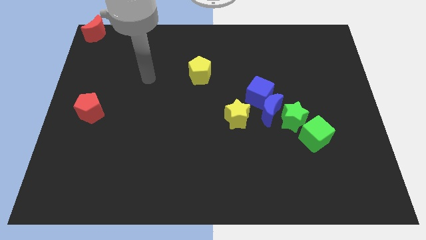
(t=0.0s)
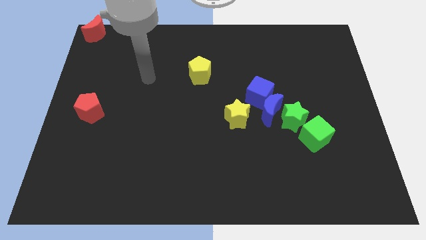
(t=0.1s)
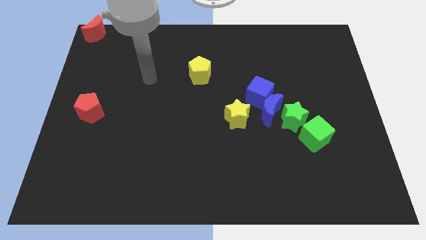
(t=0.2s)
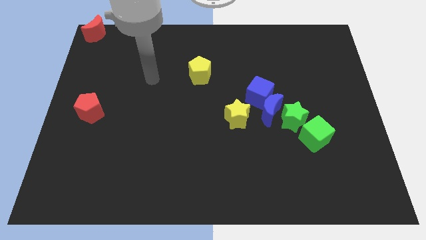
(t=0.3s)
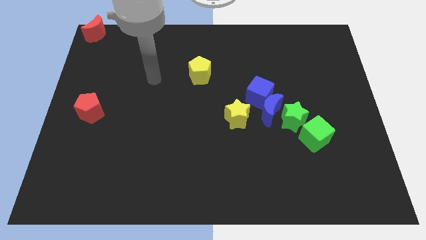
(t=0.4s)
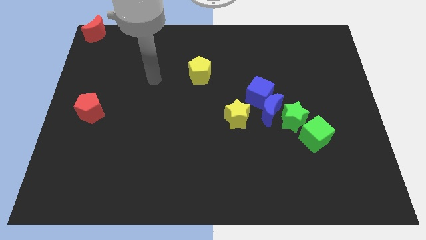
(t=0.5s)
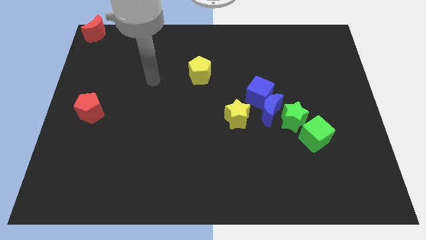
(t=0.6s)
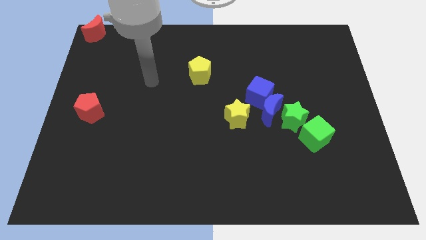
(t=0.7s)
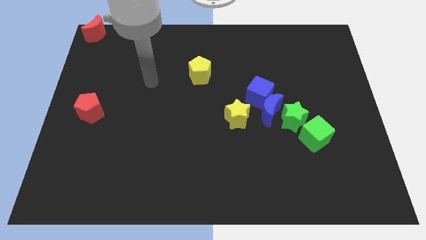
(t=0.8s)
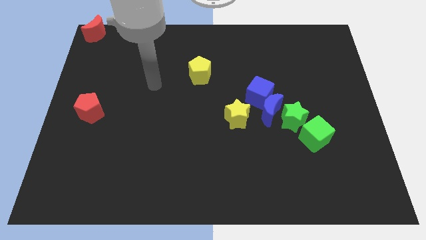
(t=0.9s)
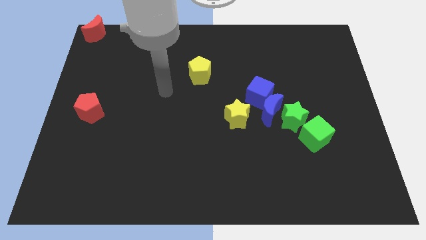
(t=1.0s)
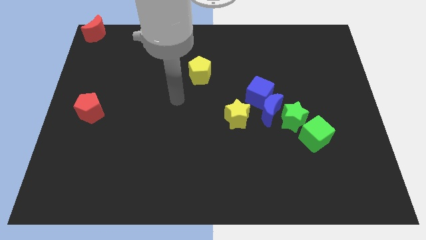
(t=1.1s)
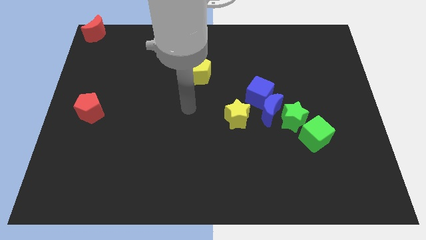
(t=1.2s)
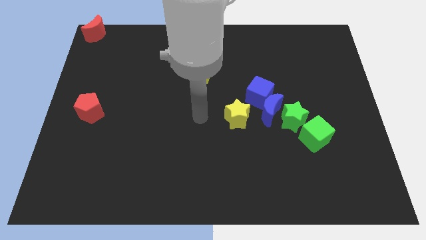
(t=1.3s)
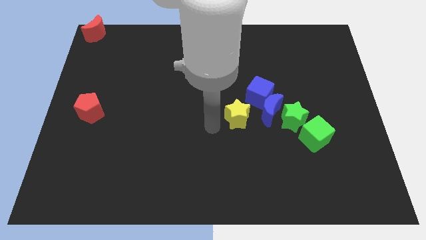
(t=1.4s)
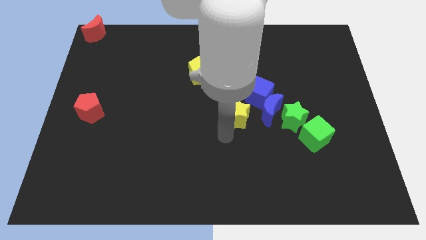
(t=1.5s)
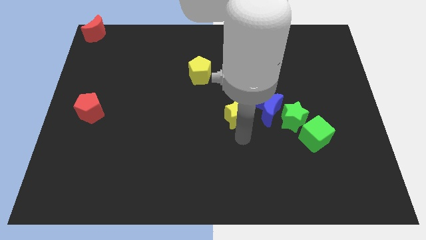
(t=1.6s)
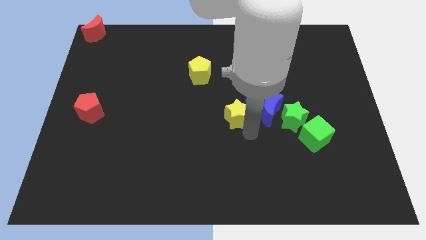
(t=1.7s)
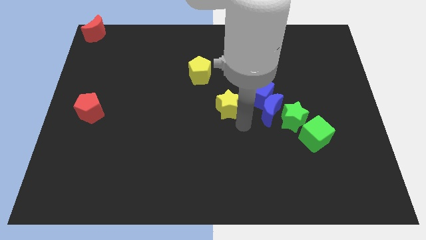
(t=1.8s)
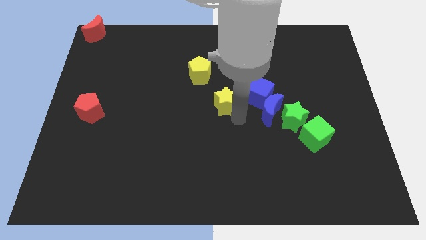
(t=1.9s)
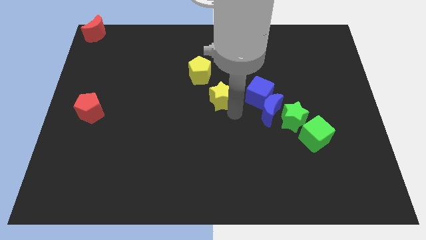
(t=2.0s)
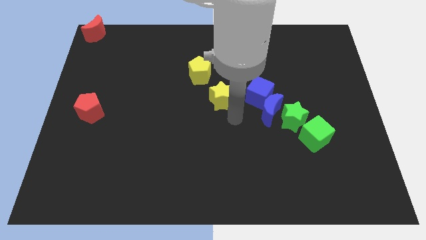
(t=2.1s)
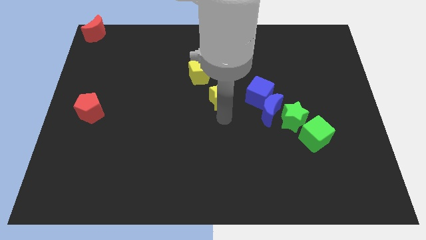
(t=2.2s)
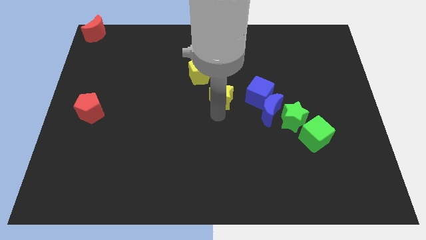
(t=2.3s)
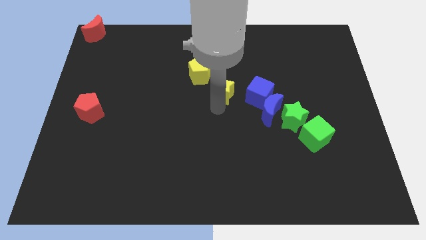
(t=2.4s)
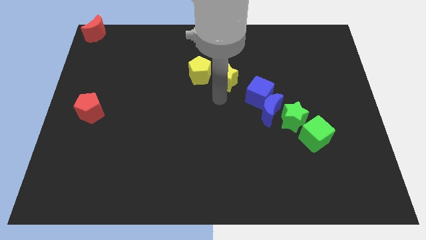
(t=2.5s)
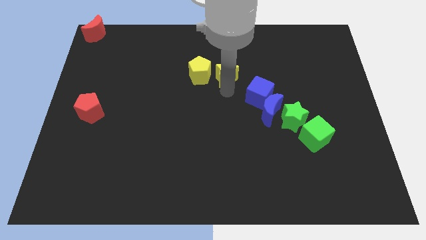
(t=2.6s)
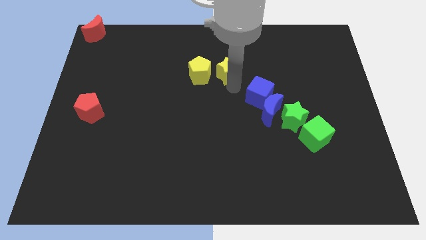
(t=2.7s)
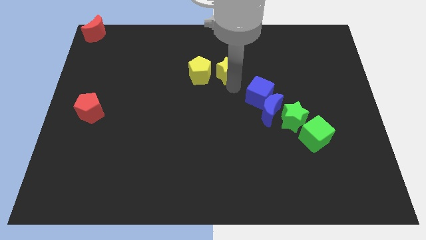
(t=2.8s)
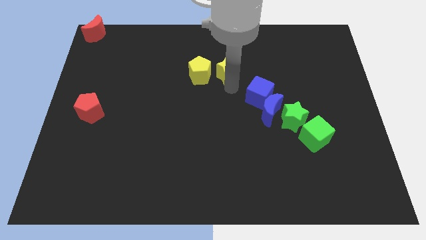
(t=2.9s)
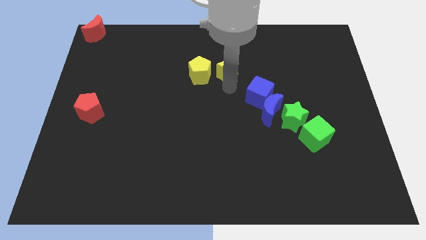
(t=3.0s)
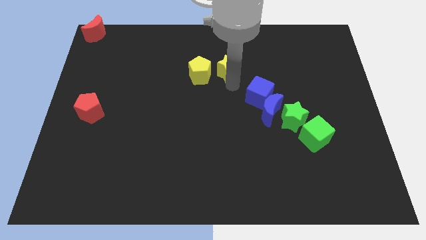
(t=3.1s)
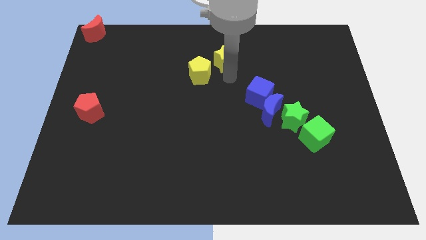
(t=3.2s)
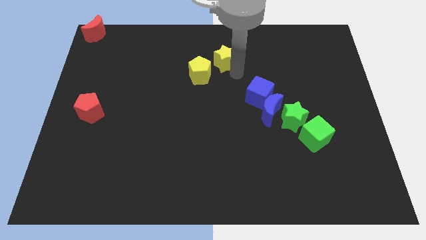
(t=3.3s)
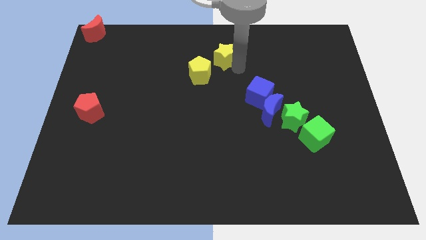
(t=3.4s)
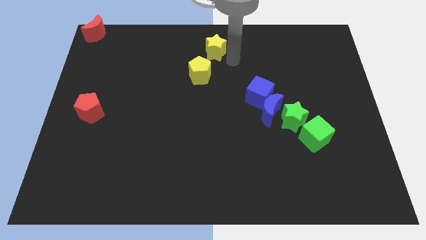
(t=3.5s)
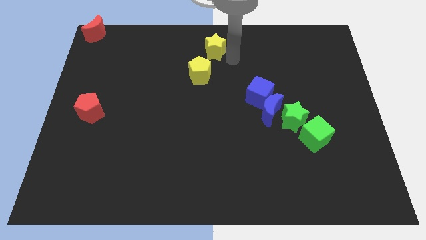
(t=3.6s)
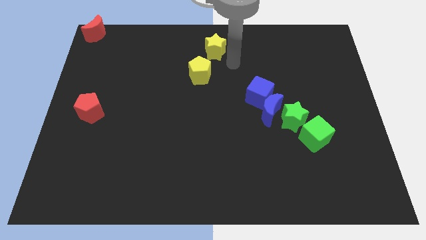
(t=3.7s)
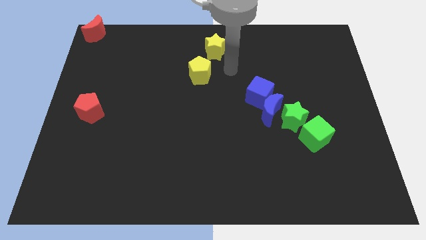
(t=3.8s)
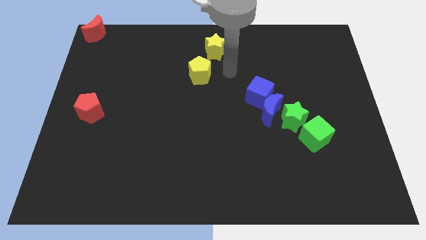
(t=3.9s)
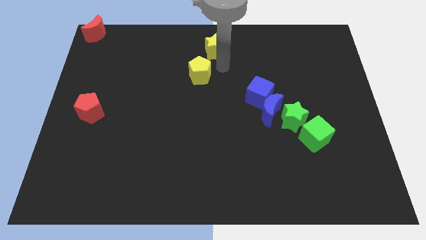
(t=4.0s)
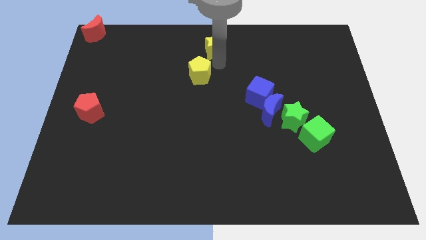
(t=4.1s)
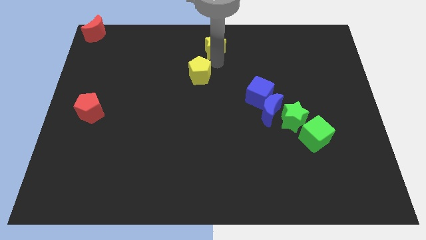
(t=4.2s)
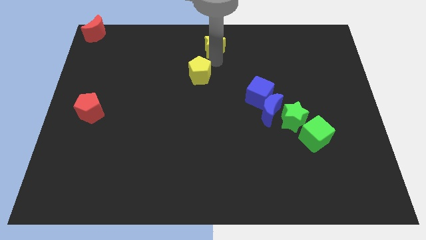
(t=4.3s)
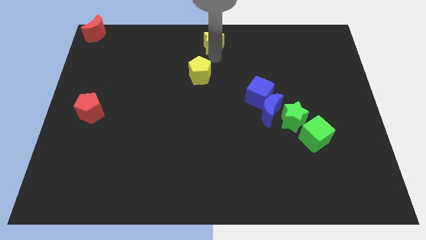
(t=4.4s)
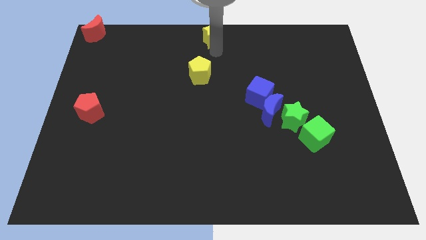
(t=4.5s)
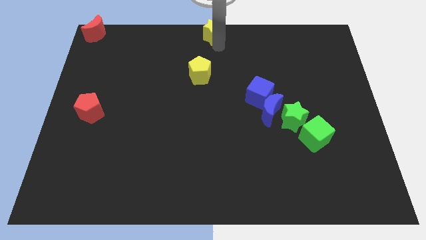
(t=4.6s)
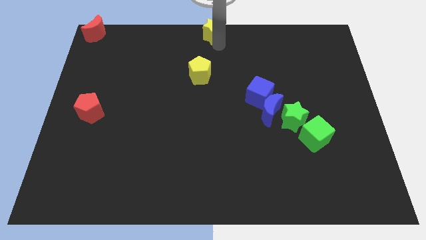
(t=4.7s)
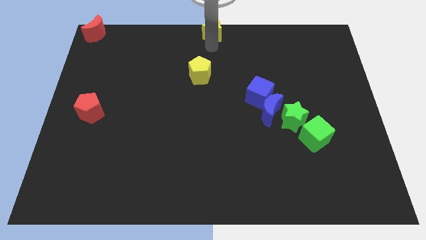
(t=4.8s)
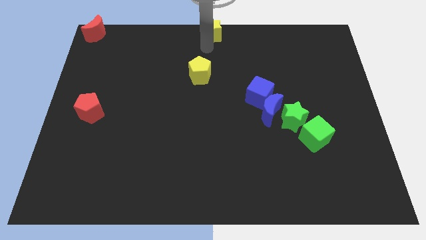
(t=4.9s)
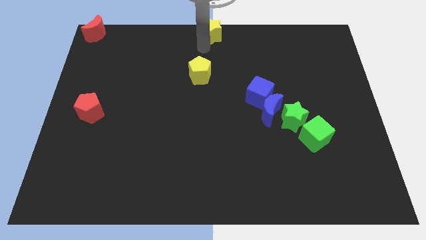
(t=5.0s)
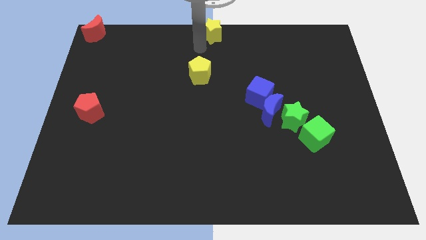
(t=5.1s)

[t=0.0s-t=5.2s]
place the yellow star to the top center of the board

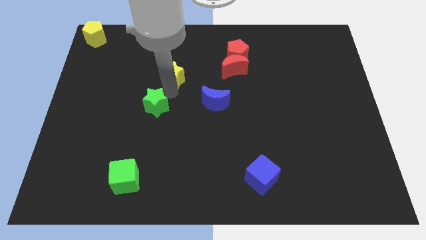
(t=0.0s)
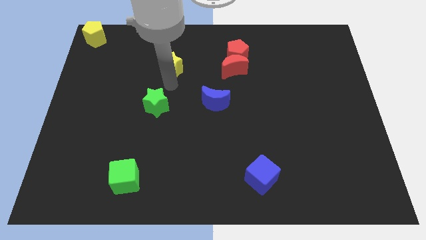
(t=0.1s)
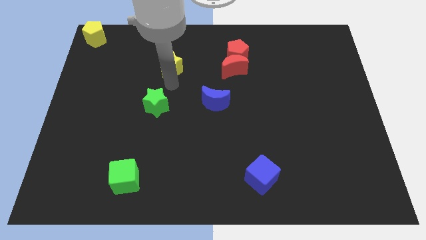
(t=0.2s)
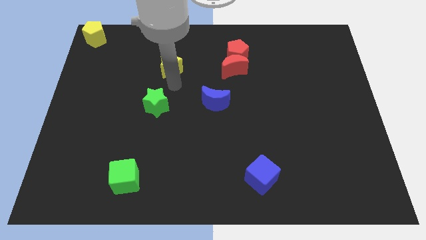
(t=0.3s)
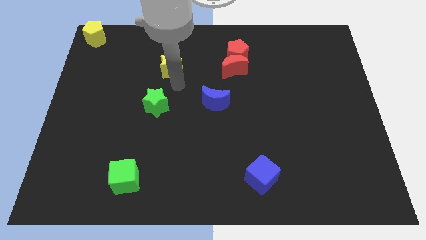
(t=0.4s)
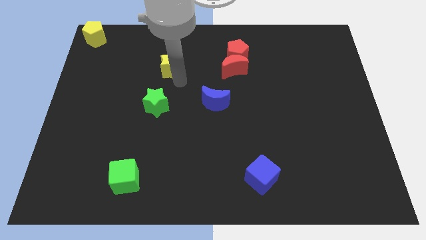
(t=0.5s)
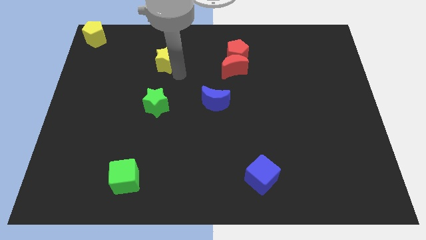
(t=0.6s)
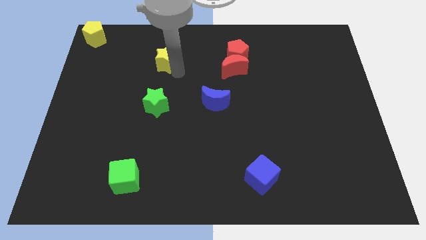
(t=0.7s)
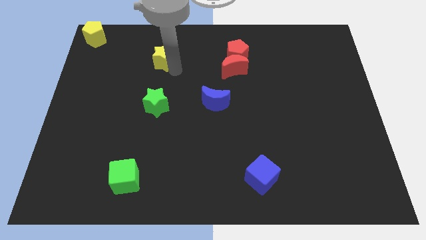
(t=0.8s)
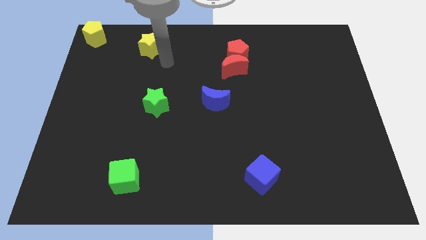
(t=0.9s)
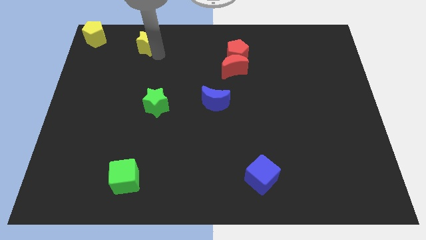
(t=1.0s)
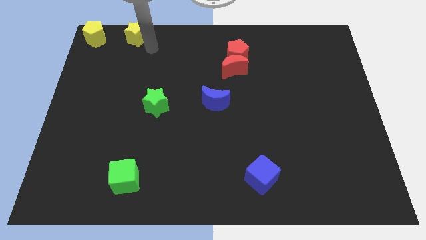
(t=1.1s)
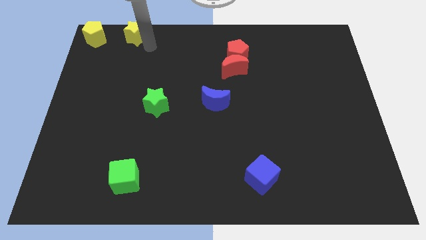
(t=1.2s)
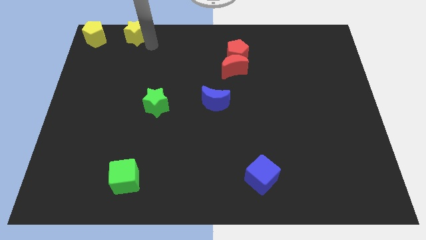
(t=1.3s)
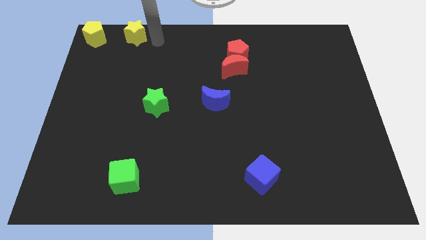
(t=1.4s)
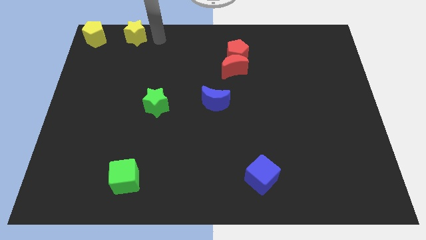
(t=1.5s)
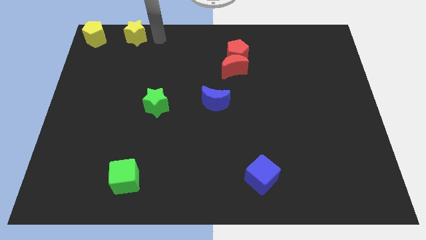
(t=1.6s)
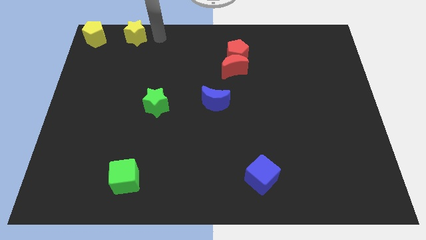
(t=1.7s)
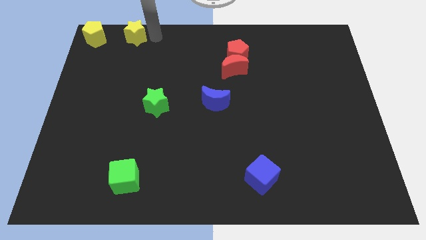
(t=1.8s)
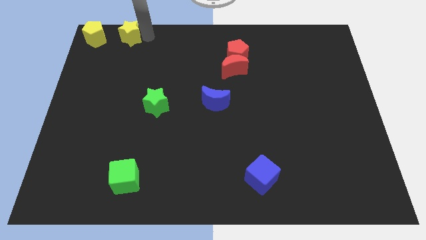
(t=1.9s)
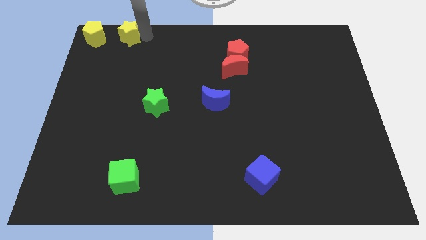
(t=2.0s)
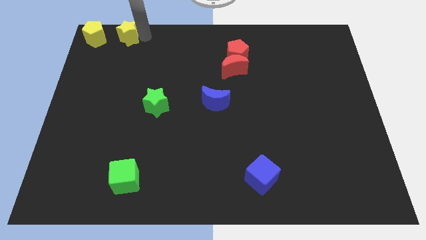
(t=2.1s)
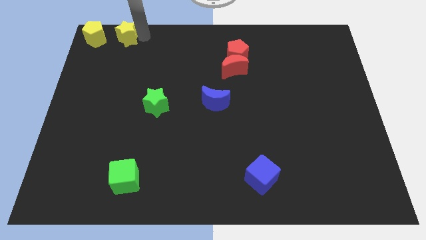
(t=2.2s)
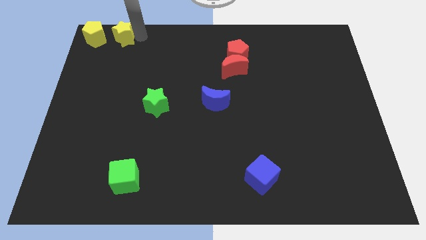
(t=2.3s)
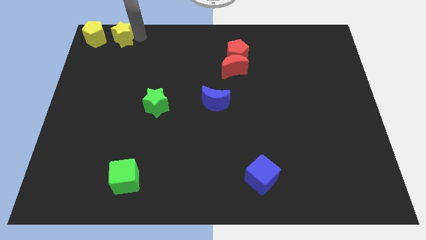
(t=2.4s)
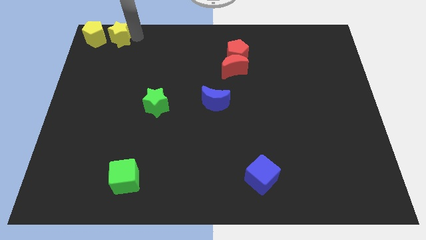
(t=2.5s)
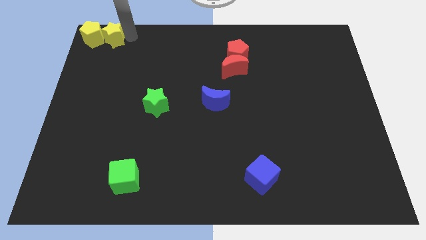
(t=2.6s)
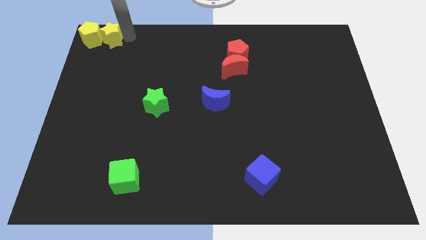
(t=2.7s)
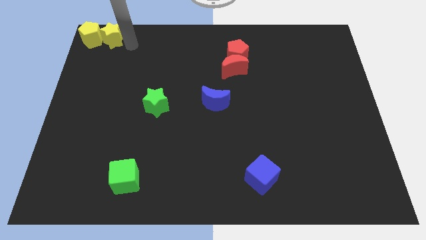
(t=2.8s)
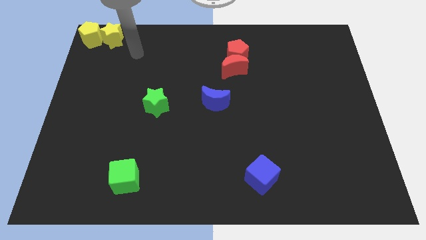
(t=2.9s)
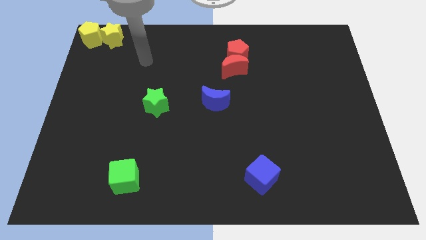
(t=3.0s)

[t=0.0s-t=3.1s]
push the yellow star to the right side of the yellow pentagon

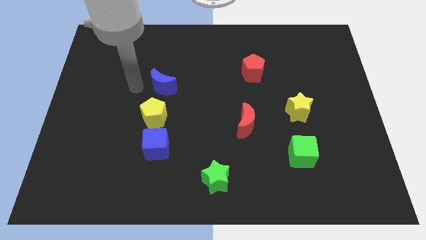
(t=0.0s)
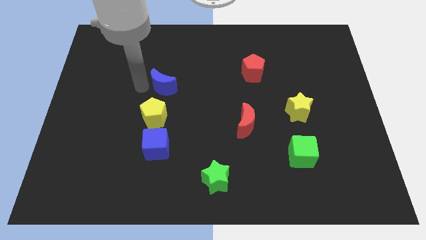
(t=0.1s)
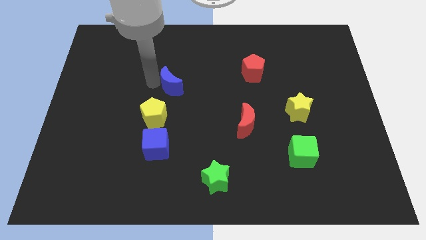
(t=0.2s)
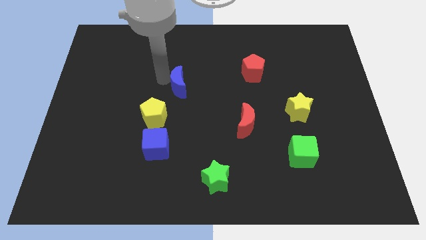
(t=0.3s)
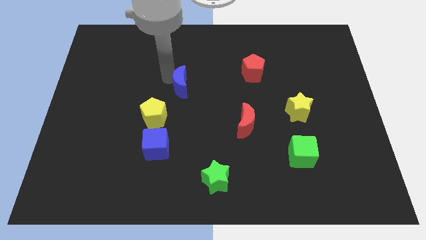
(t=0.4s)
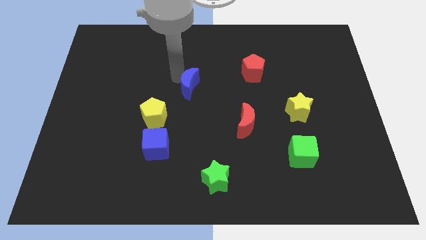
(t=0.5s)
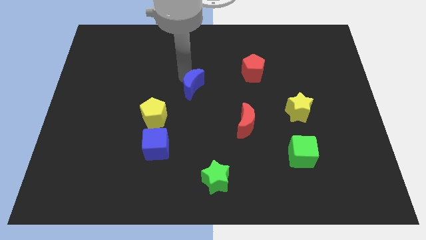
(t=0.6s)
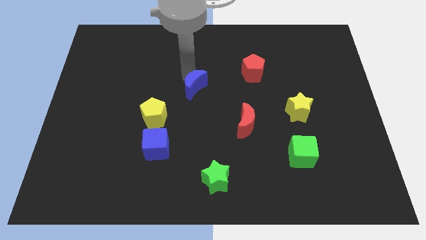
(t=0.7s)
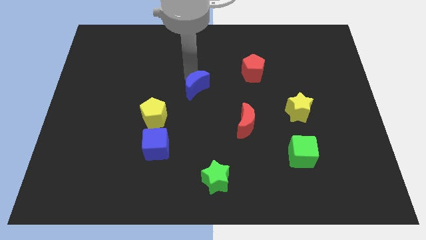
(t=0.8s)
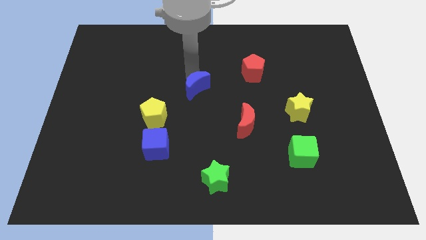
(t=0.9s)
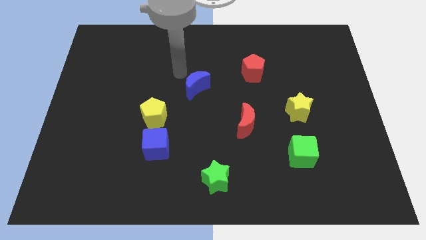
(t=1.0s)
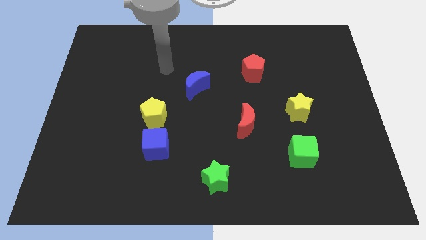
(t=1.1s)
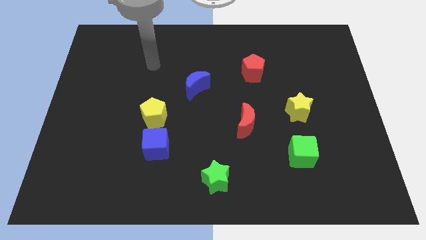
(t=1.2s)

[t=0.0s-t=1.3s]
put the blue crescent in between the red and yellow pentagons
